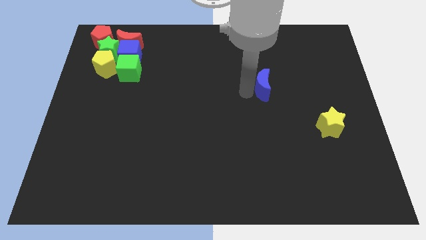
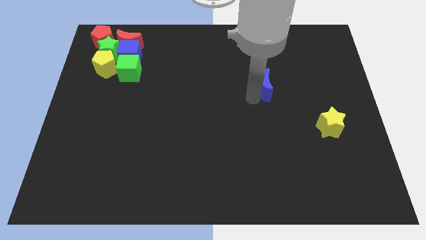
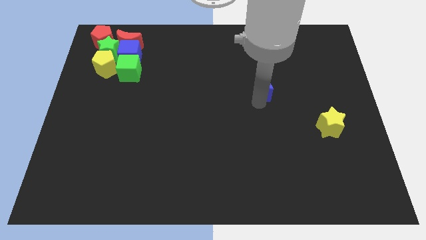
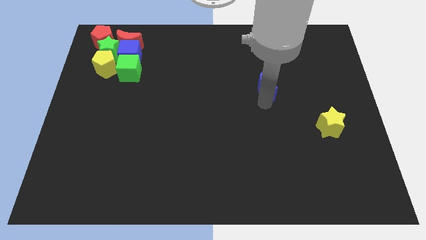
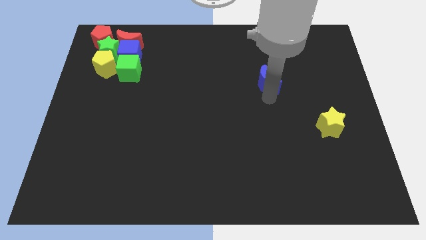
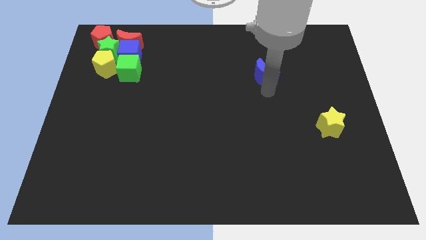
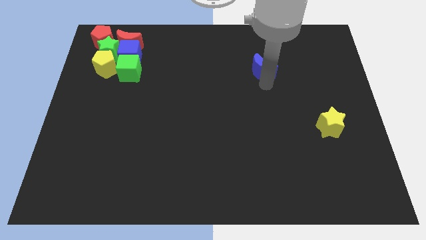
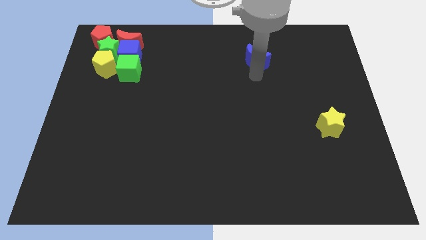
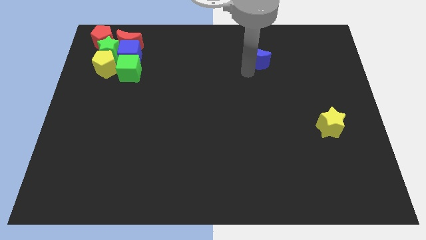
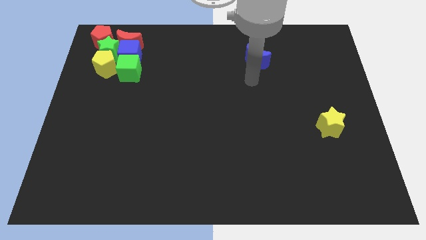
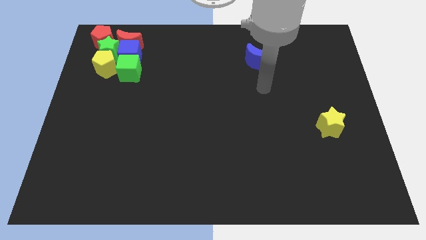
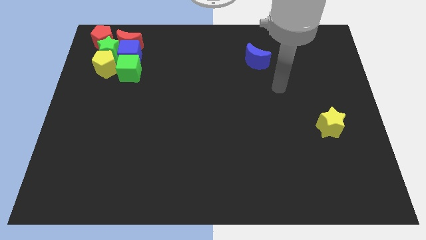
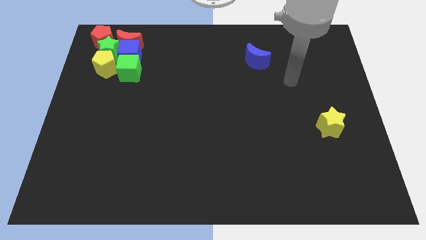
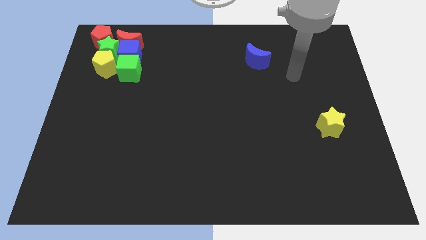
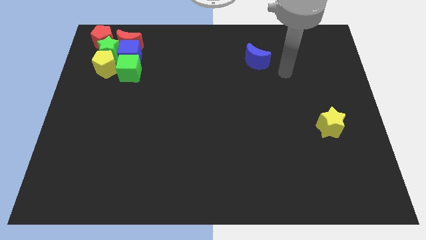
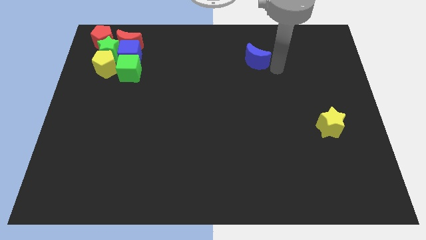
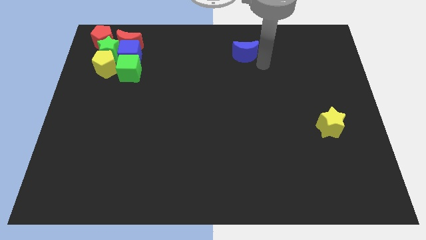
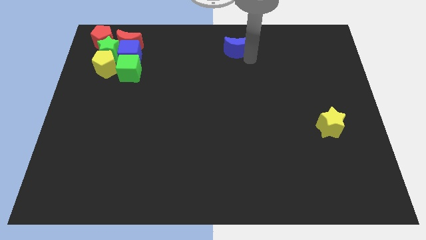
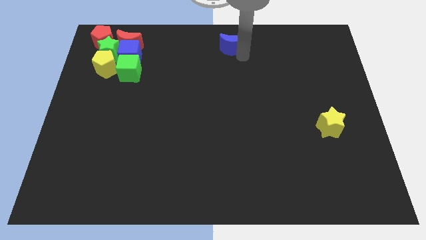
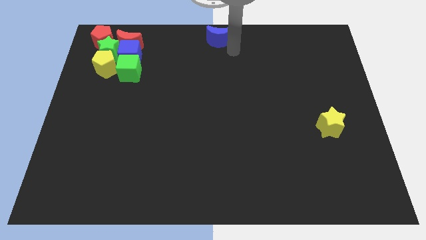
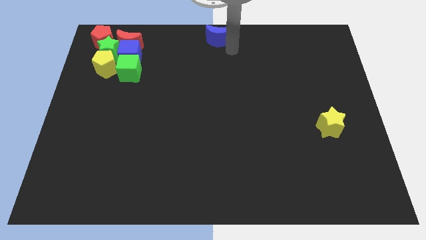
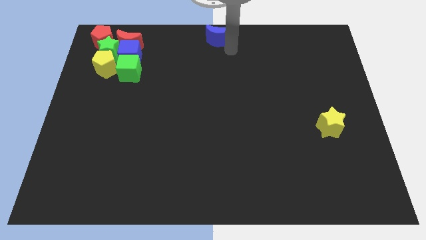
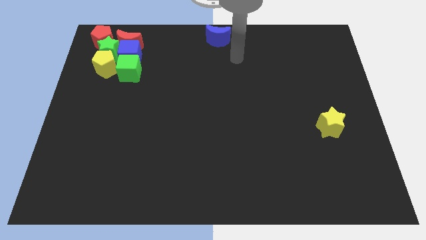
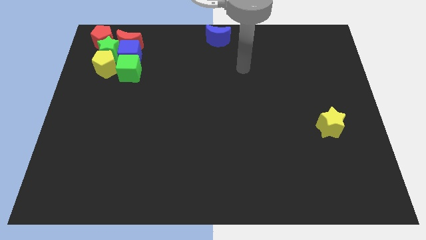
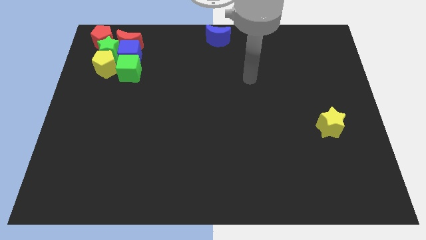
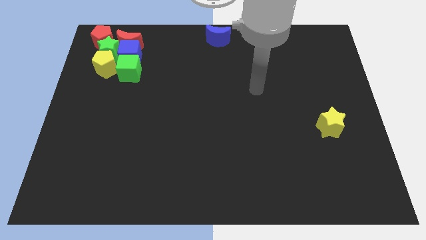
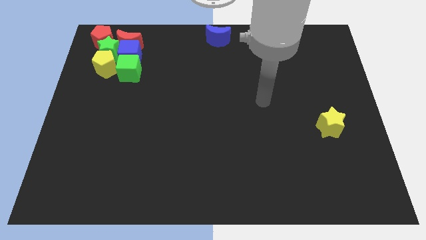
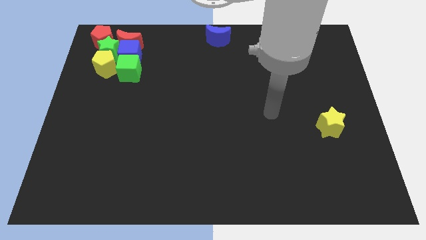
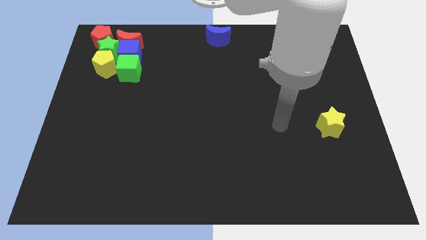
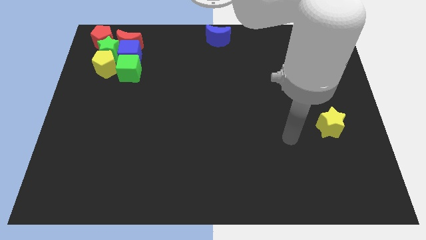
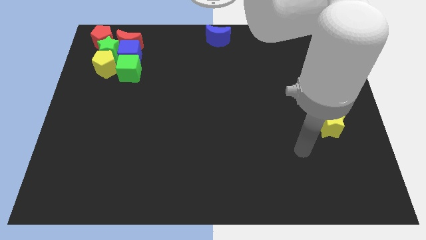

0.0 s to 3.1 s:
place the blue moon on the top center of the board

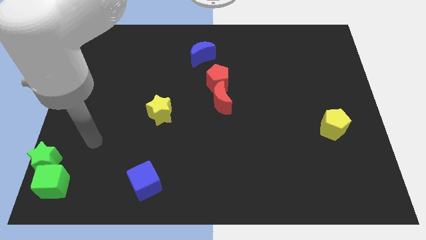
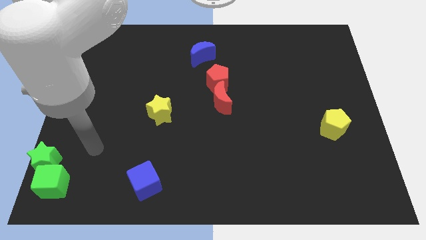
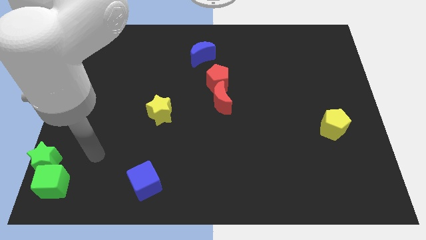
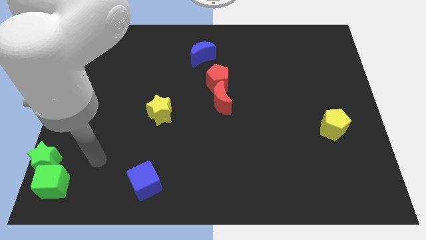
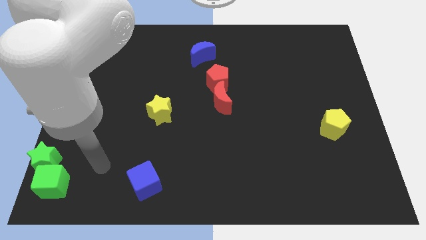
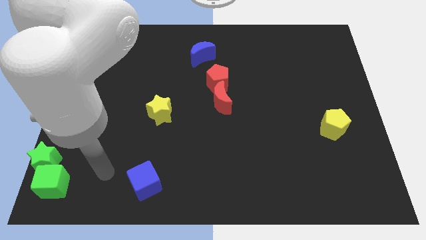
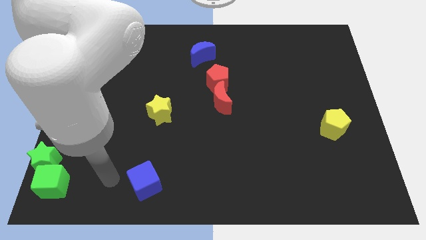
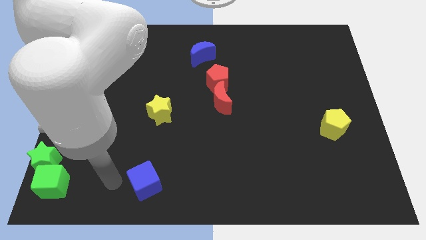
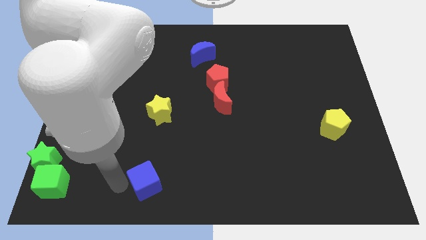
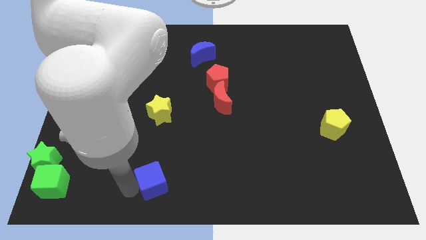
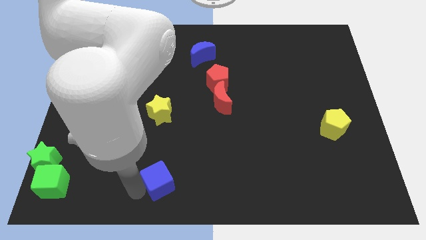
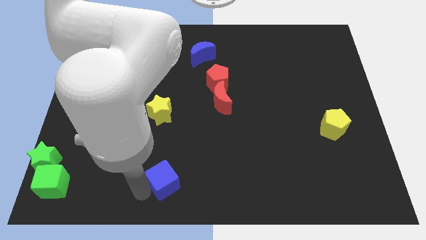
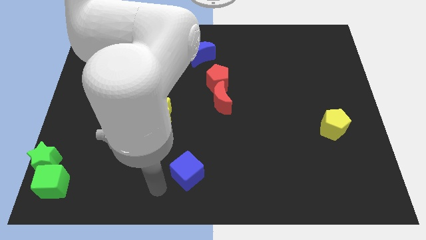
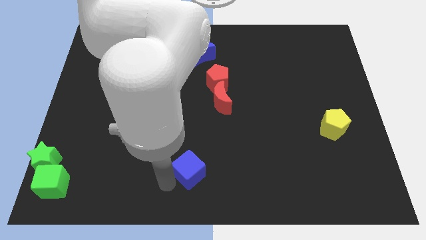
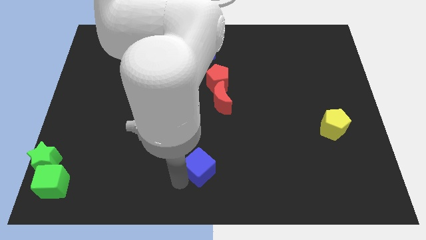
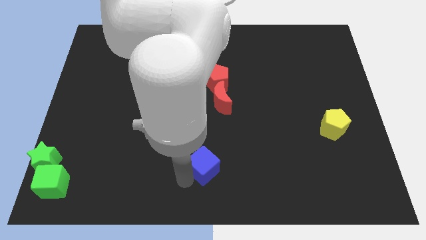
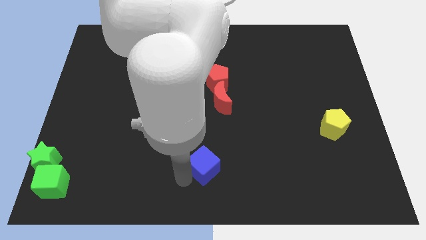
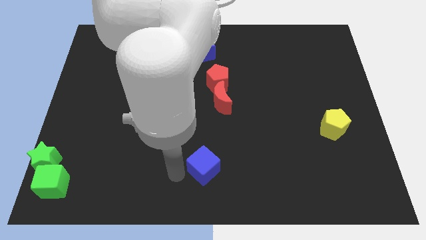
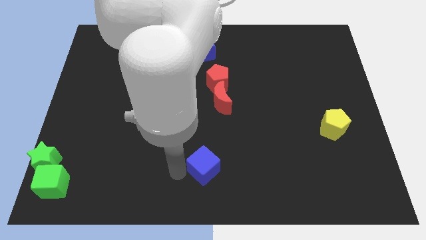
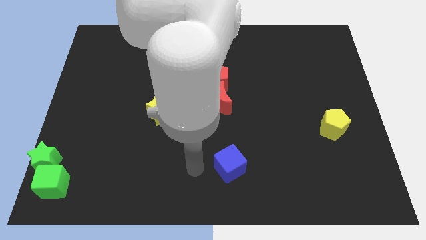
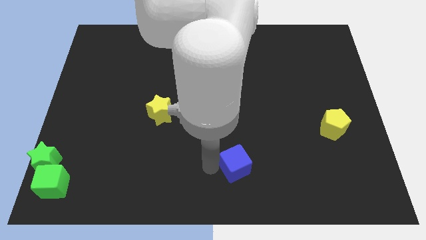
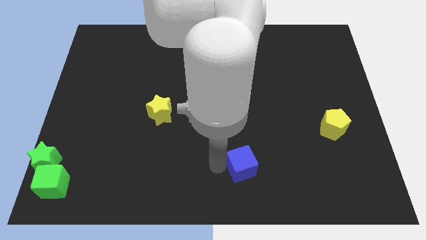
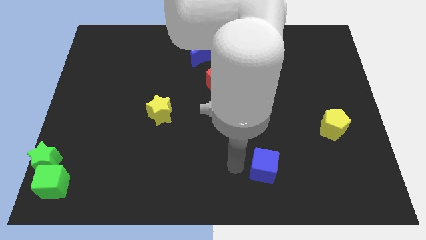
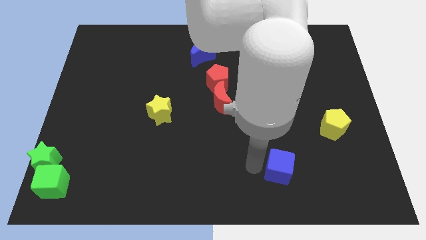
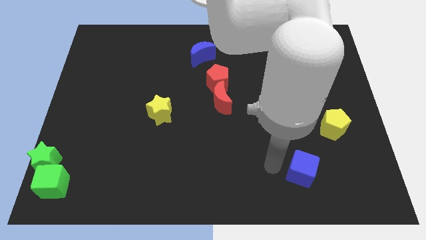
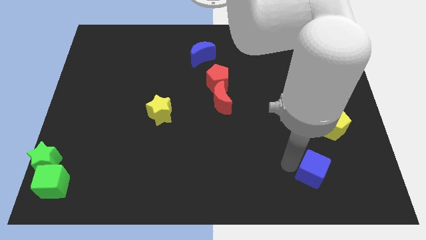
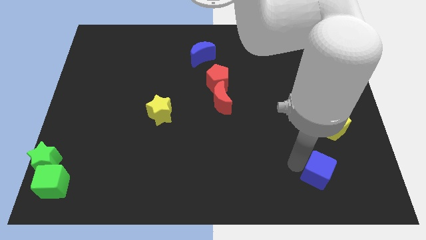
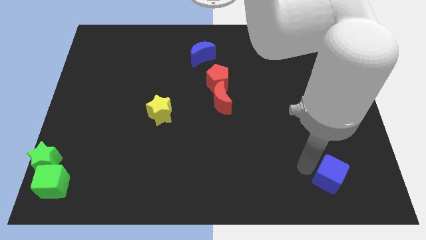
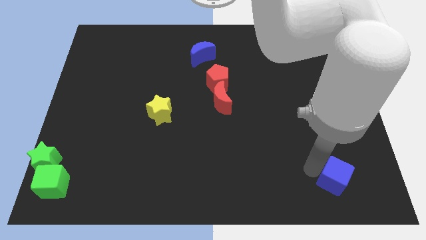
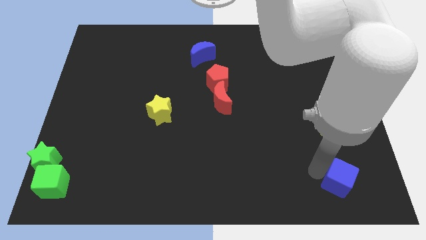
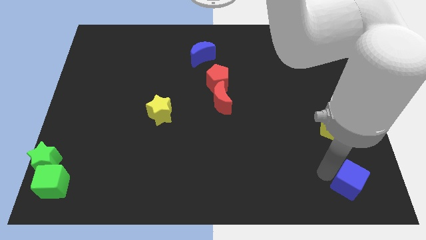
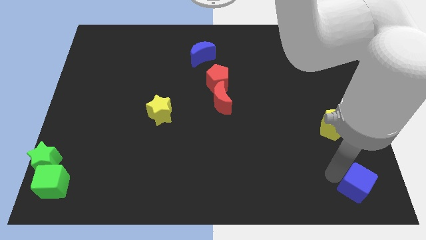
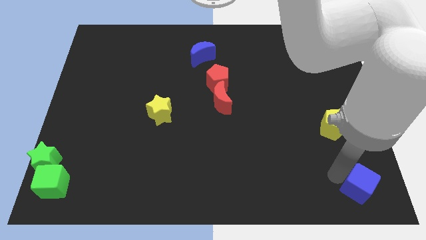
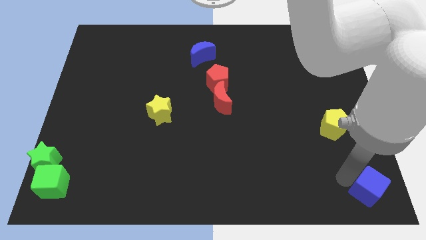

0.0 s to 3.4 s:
move the blue cube to bottom right

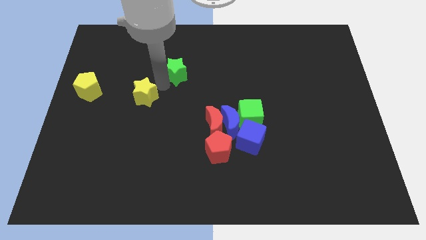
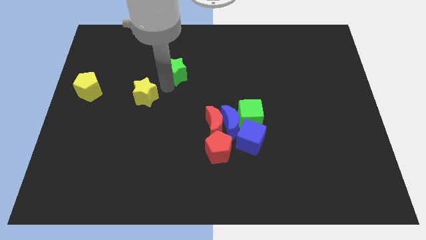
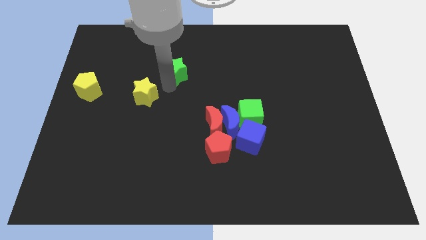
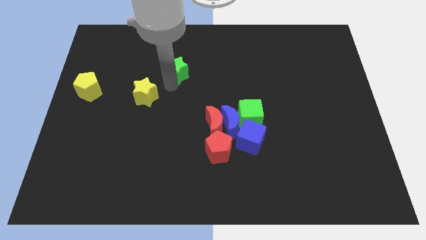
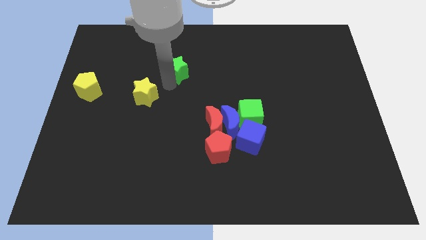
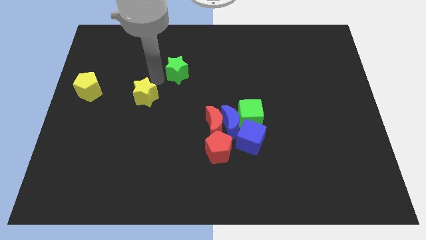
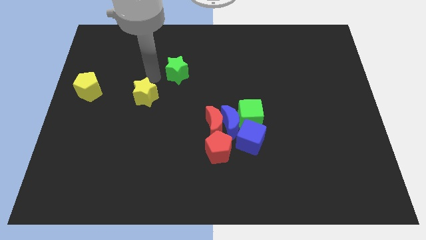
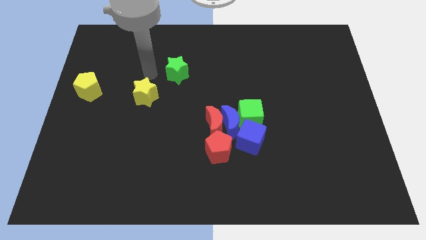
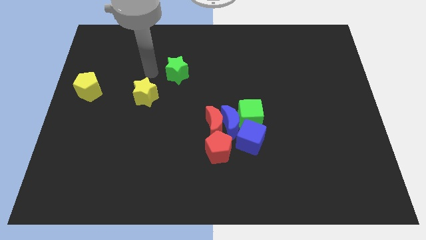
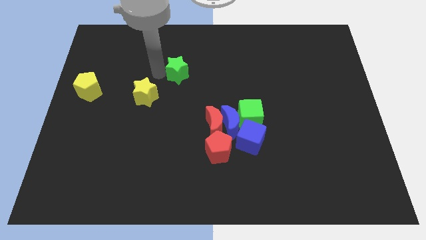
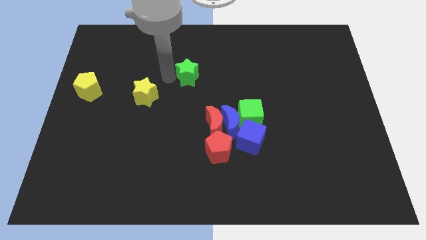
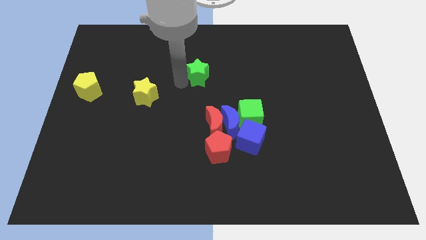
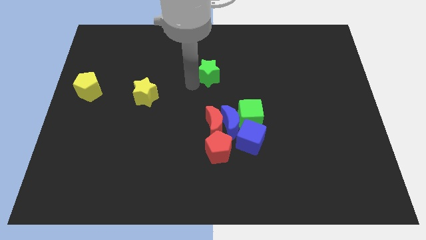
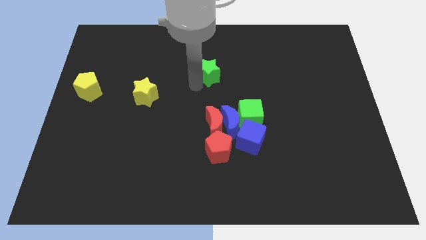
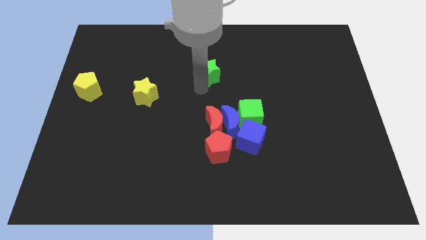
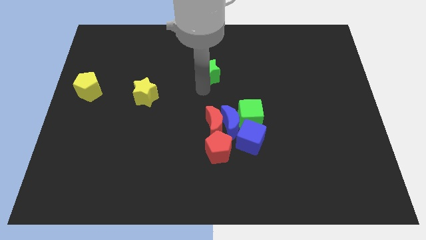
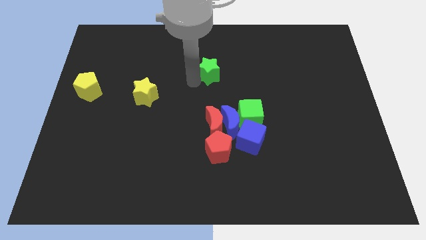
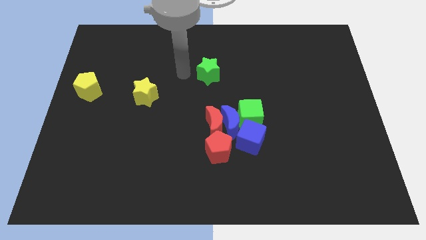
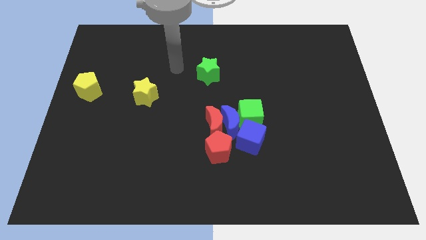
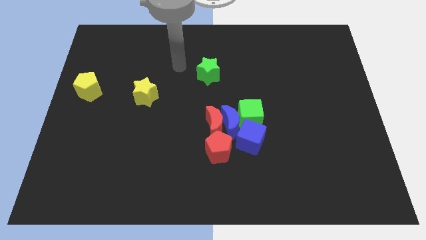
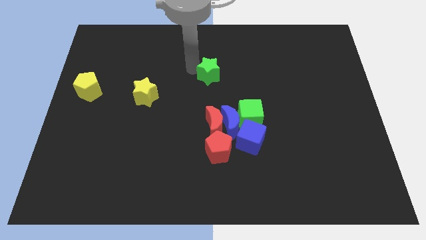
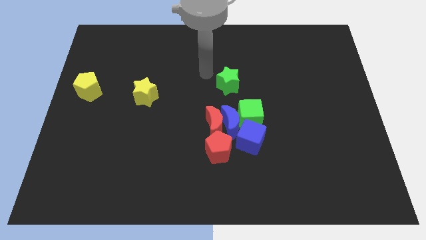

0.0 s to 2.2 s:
push the green star towards center right

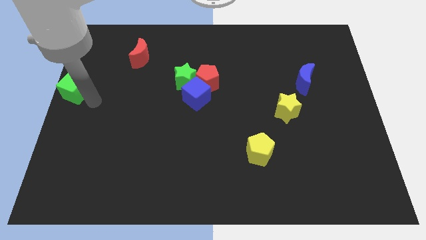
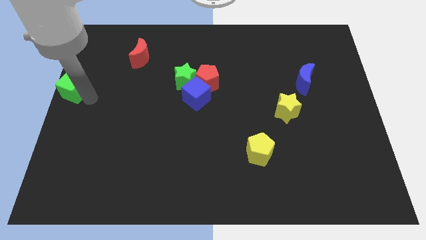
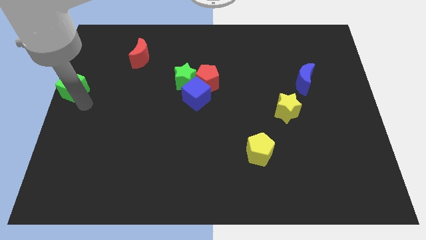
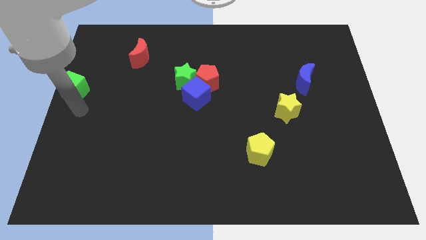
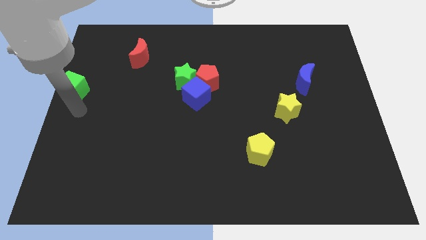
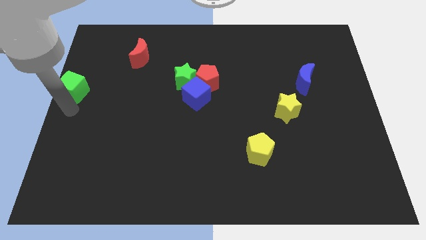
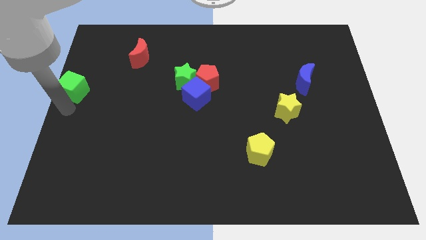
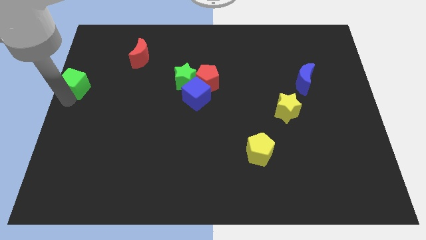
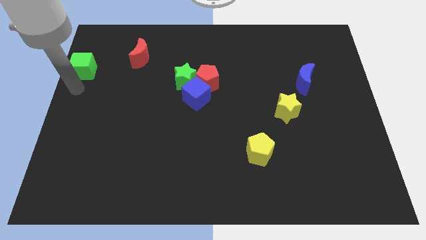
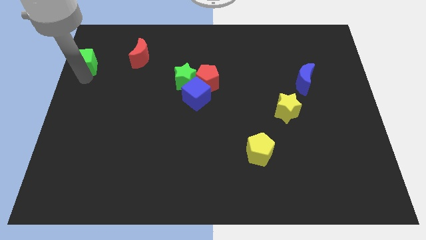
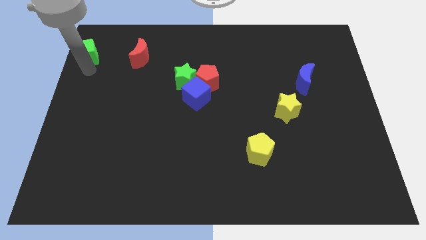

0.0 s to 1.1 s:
put the green cube to the left side of the red crescent
